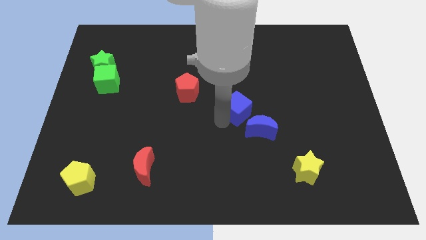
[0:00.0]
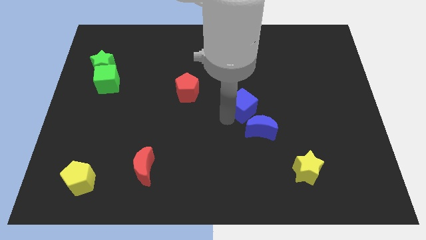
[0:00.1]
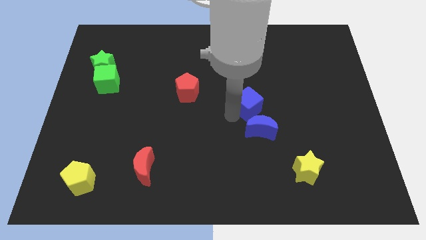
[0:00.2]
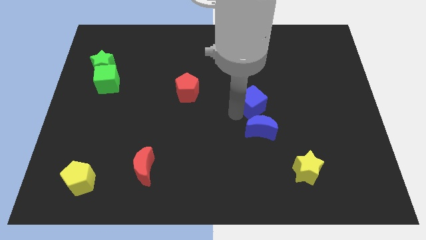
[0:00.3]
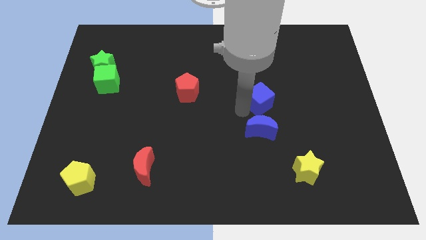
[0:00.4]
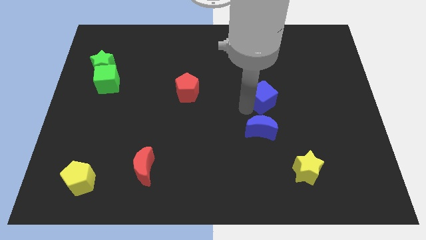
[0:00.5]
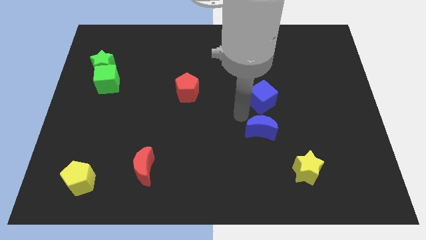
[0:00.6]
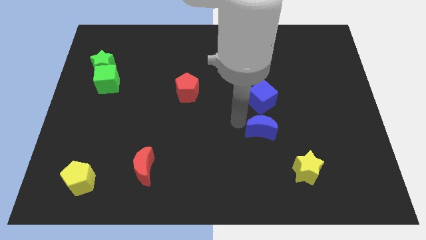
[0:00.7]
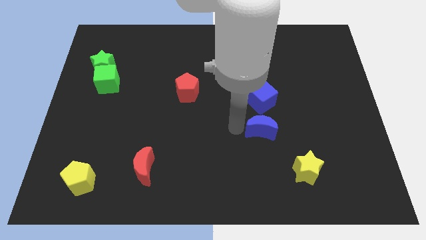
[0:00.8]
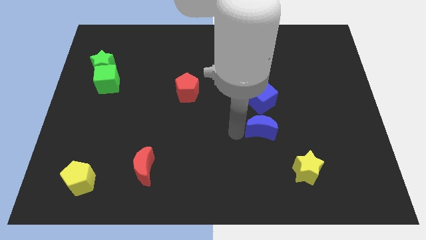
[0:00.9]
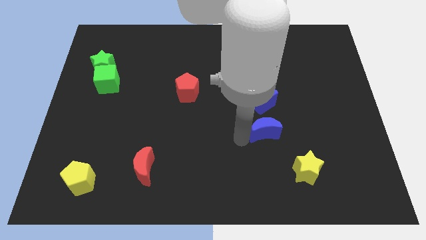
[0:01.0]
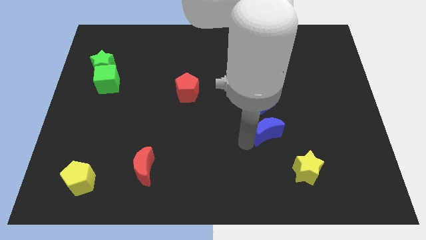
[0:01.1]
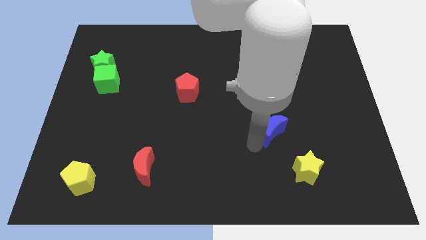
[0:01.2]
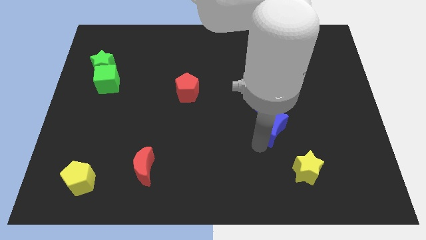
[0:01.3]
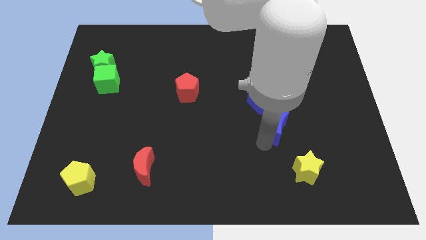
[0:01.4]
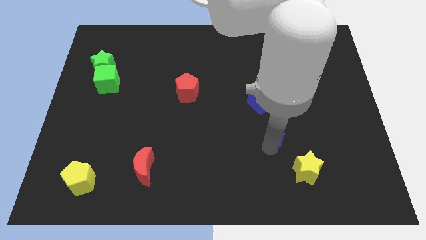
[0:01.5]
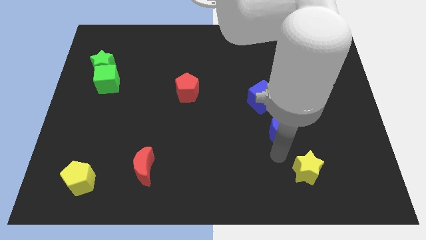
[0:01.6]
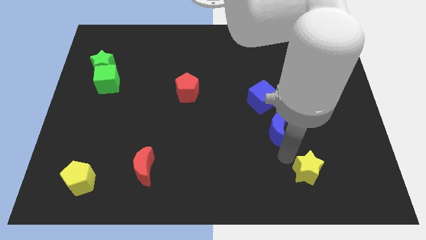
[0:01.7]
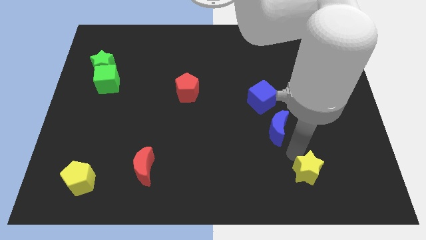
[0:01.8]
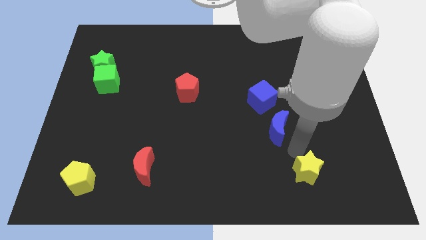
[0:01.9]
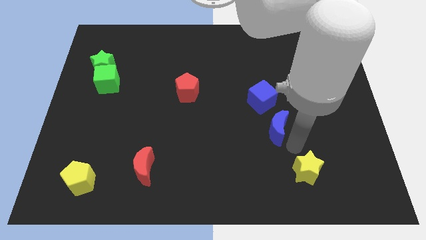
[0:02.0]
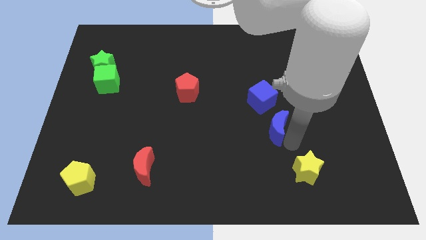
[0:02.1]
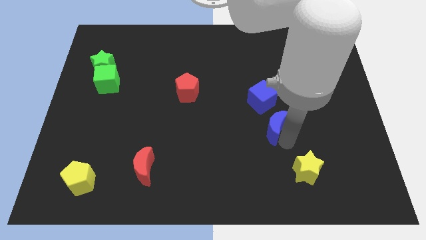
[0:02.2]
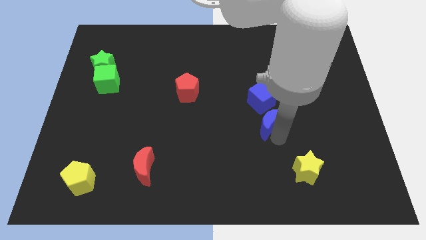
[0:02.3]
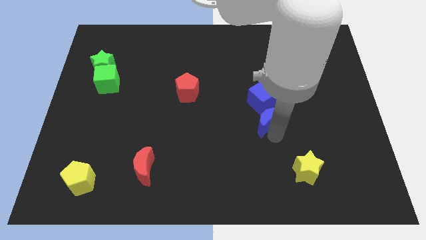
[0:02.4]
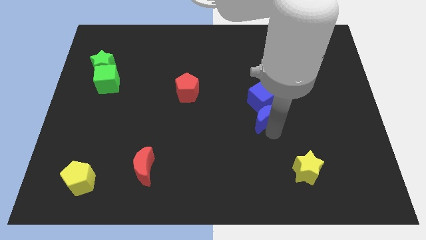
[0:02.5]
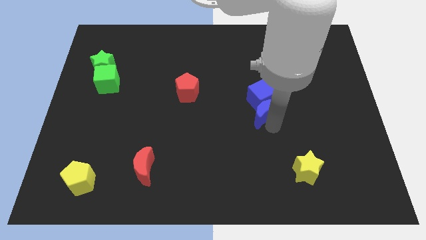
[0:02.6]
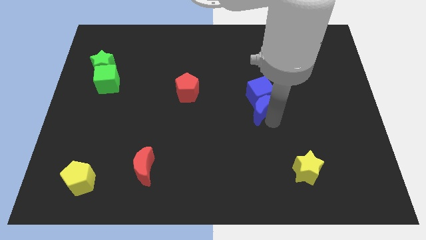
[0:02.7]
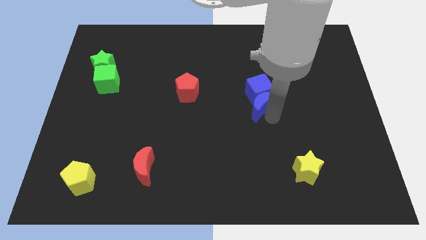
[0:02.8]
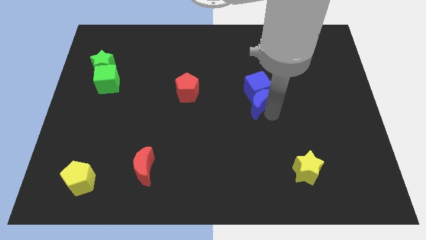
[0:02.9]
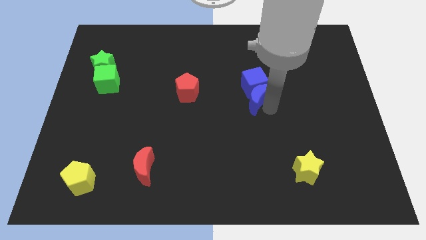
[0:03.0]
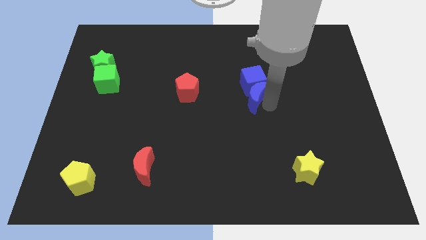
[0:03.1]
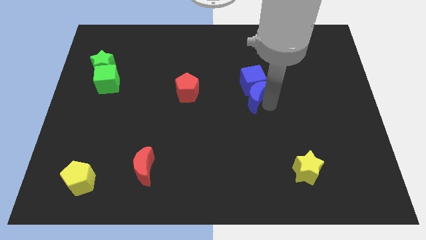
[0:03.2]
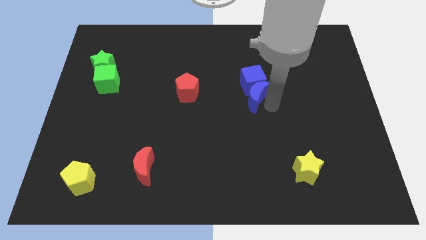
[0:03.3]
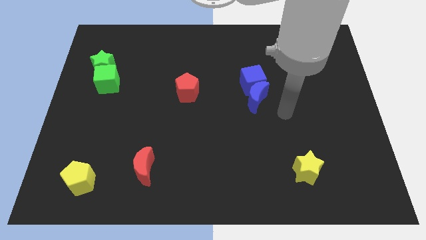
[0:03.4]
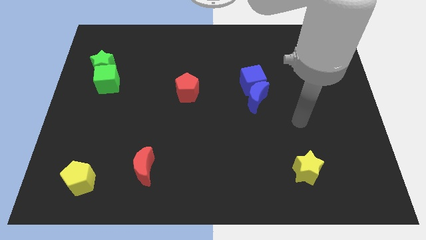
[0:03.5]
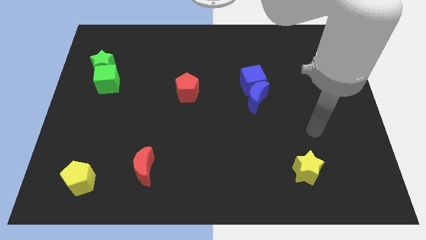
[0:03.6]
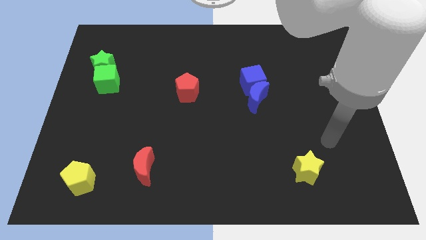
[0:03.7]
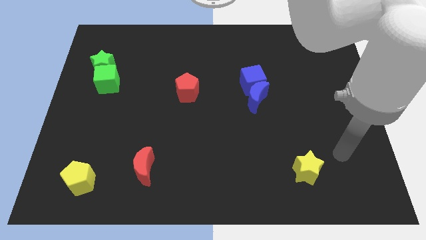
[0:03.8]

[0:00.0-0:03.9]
slightly push the blue blocks to the top of the board

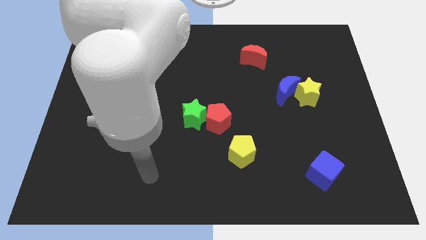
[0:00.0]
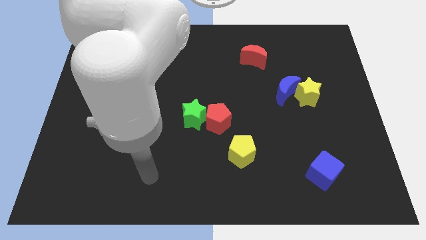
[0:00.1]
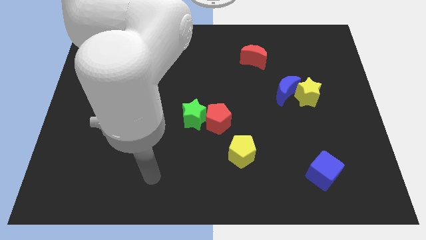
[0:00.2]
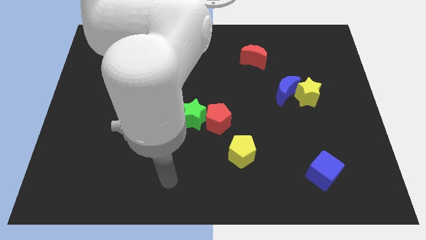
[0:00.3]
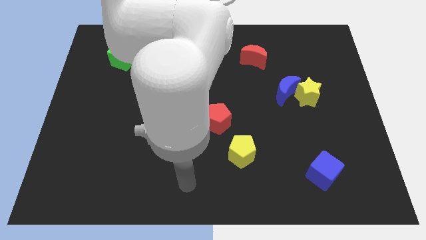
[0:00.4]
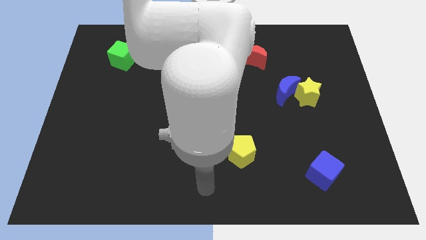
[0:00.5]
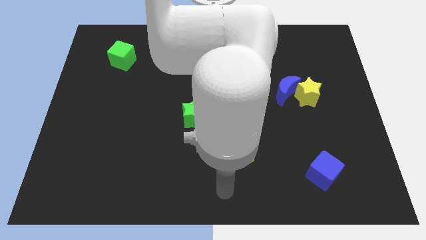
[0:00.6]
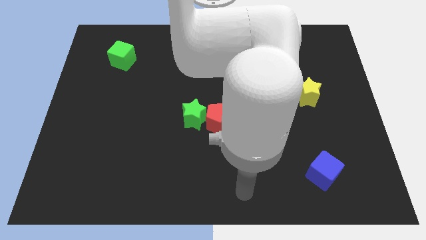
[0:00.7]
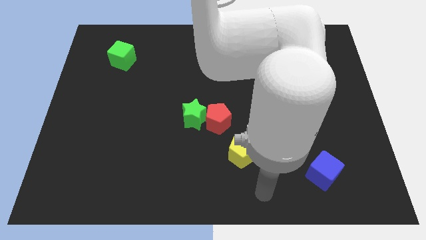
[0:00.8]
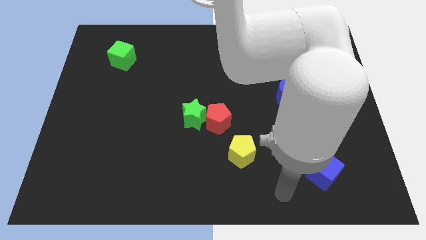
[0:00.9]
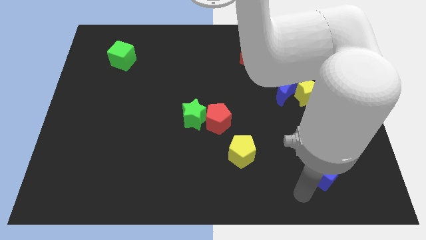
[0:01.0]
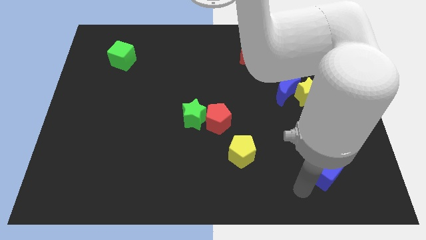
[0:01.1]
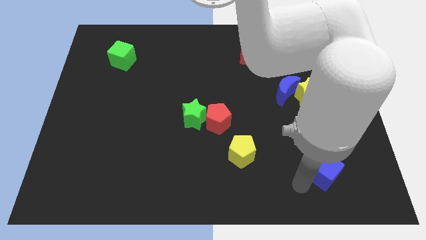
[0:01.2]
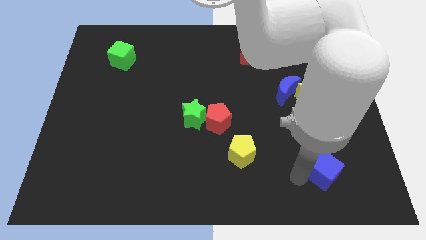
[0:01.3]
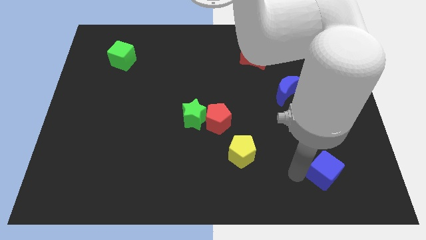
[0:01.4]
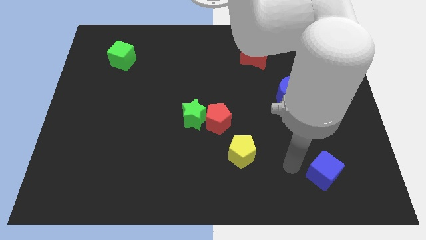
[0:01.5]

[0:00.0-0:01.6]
place your hand at left side of the blue cube

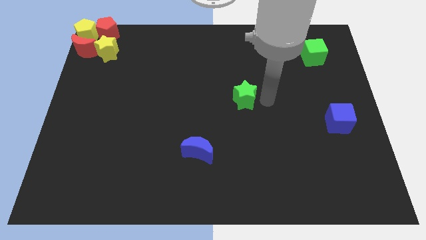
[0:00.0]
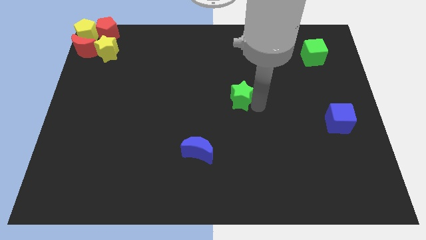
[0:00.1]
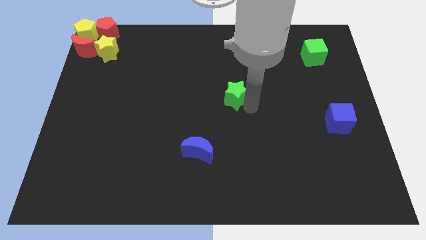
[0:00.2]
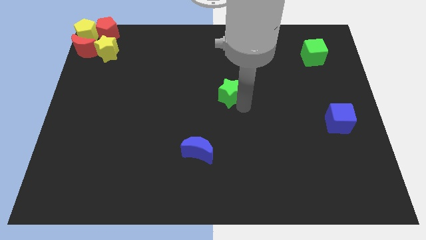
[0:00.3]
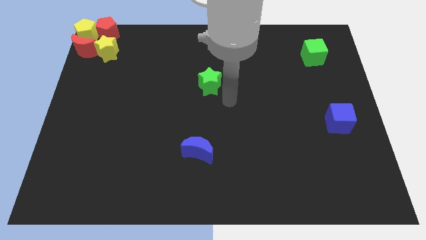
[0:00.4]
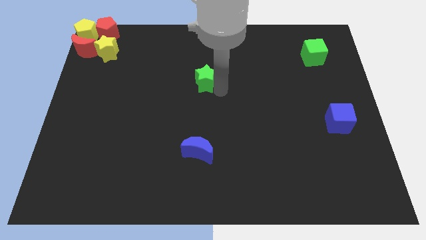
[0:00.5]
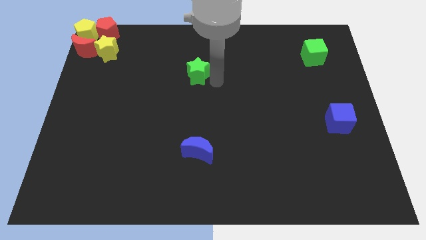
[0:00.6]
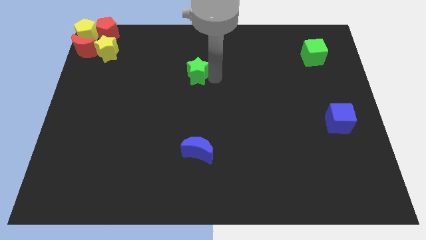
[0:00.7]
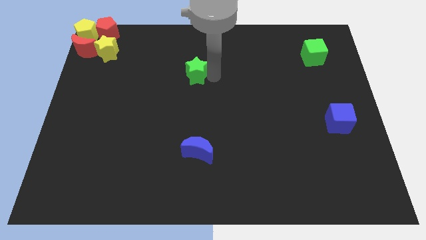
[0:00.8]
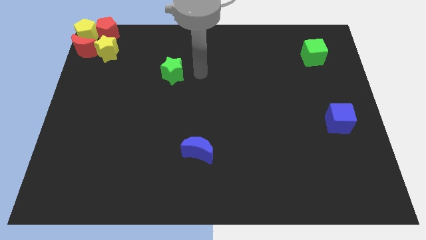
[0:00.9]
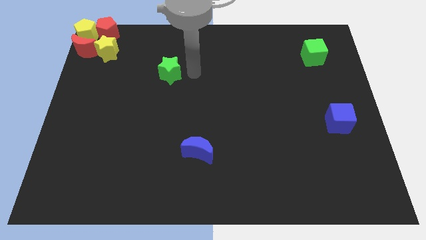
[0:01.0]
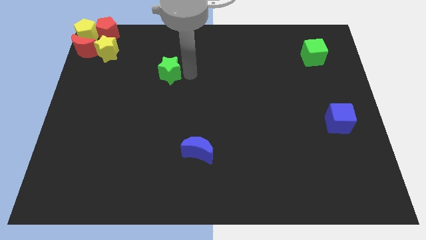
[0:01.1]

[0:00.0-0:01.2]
place the green star diagonally bottom right to the yellow star

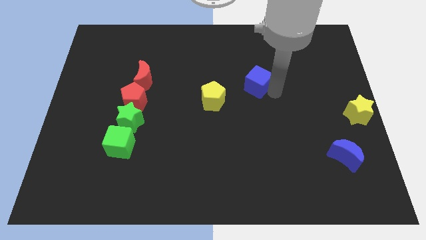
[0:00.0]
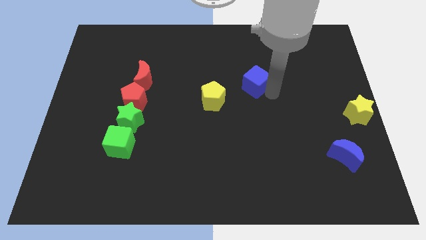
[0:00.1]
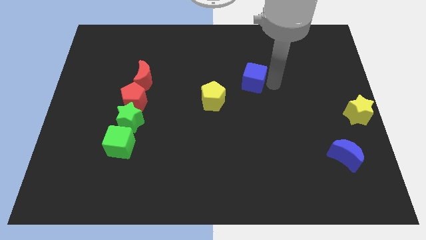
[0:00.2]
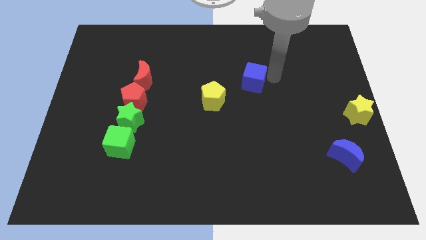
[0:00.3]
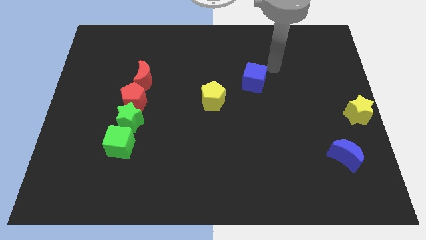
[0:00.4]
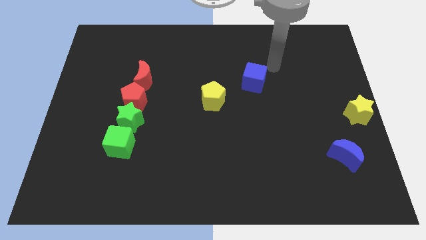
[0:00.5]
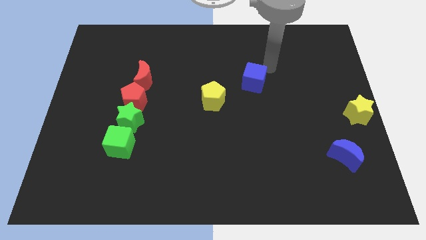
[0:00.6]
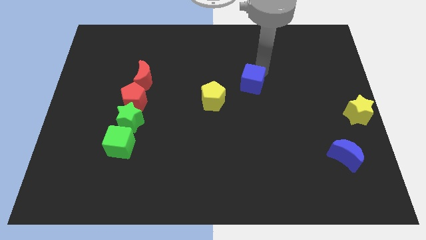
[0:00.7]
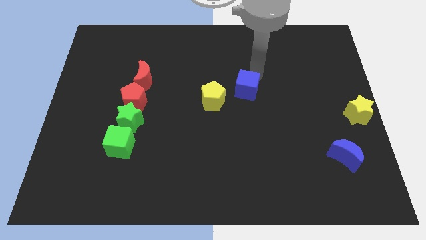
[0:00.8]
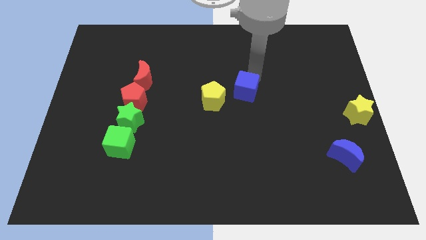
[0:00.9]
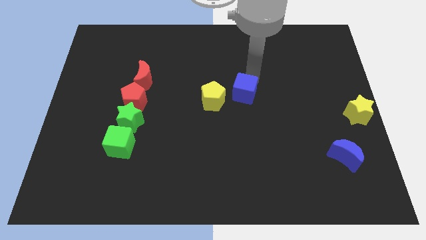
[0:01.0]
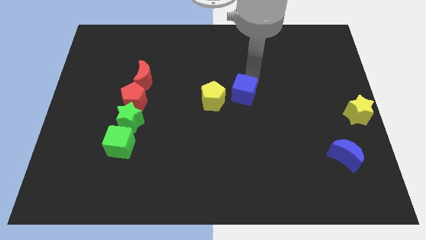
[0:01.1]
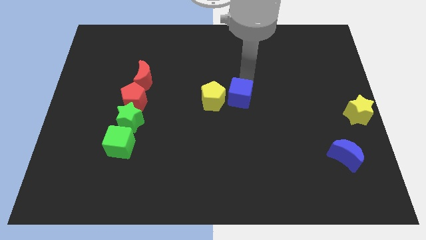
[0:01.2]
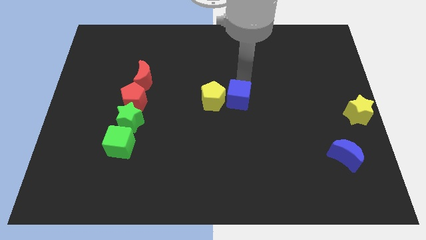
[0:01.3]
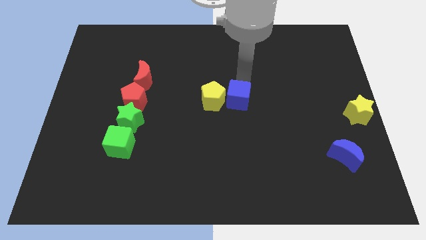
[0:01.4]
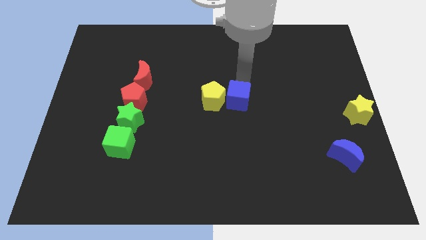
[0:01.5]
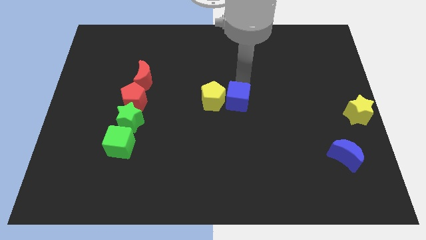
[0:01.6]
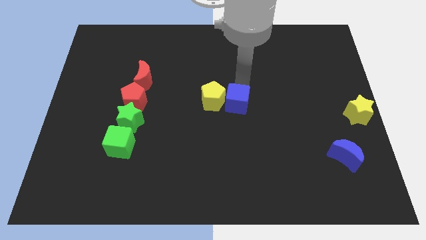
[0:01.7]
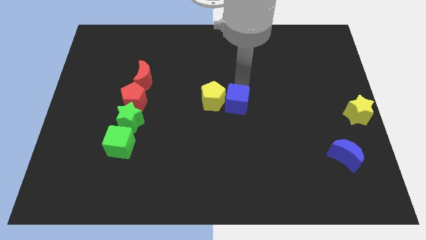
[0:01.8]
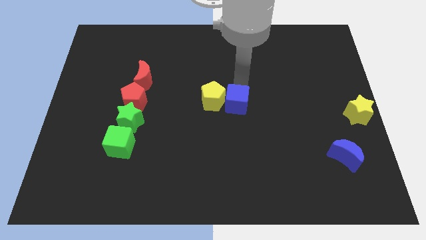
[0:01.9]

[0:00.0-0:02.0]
push the blue crescent to the right of the yellow pentagon

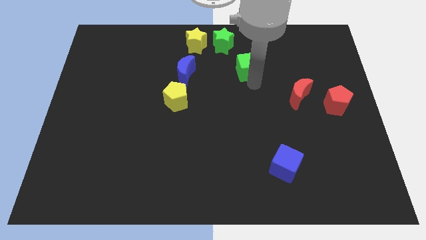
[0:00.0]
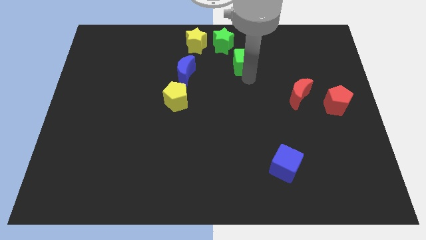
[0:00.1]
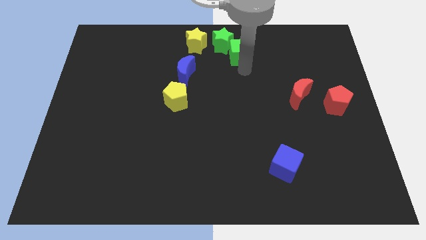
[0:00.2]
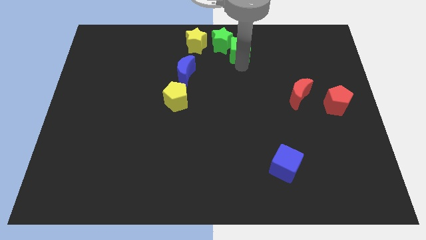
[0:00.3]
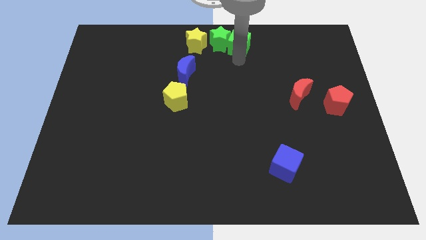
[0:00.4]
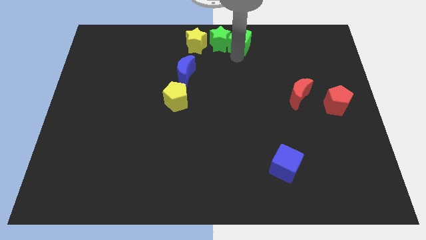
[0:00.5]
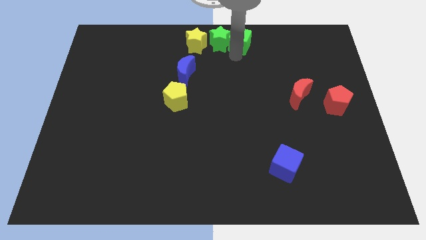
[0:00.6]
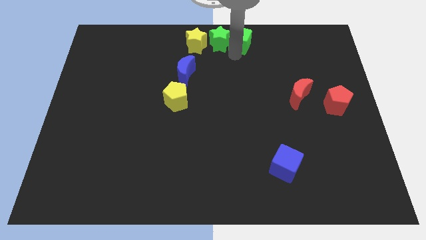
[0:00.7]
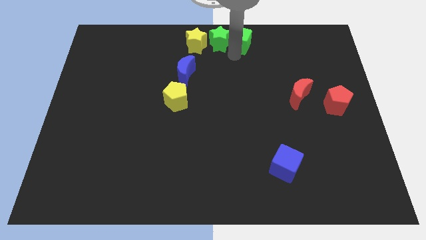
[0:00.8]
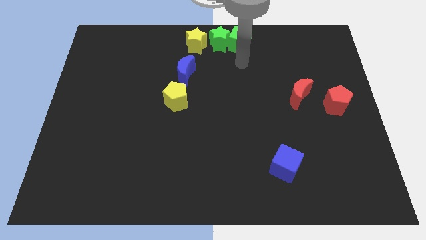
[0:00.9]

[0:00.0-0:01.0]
move green cube into green star
